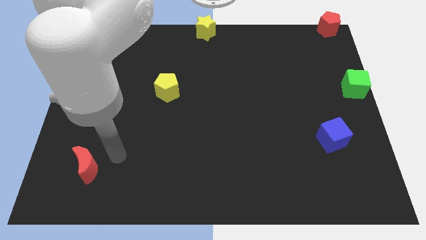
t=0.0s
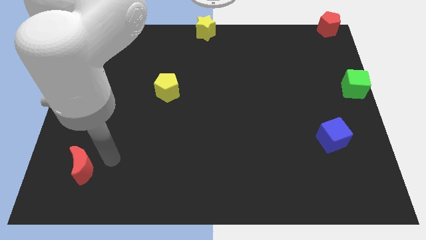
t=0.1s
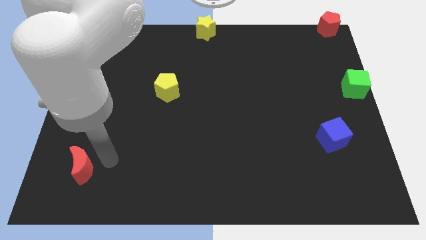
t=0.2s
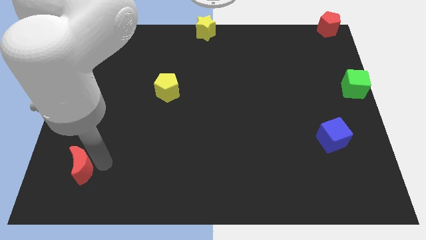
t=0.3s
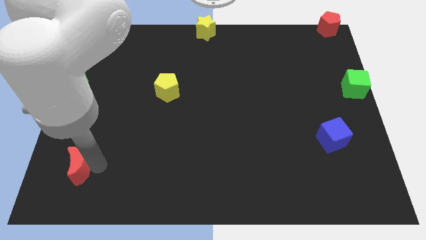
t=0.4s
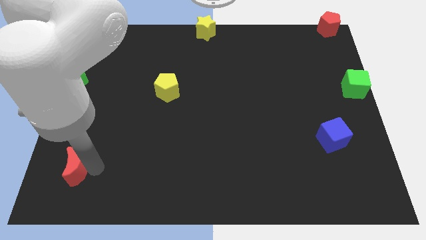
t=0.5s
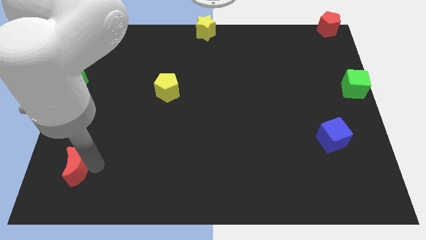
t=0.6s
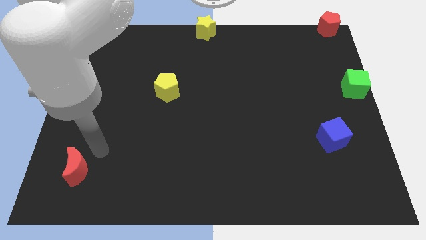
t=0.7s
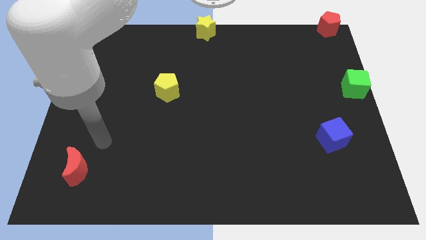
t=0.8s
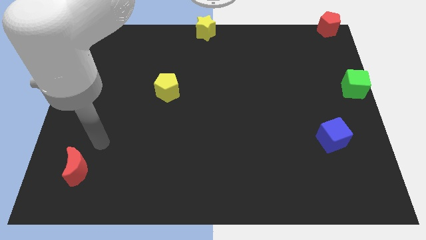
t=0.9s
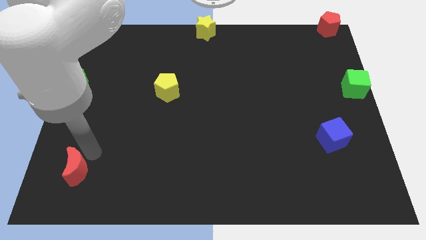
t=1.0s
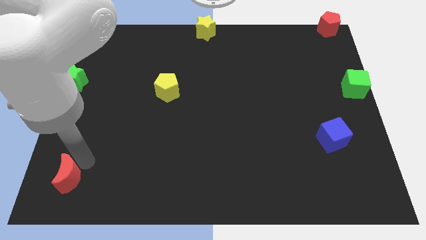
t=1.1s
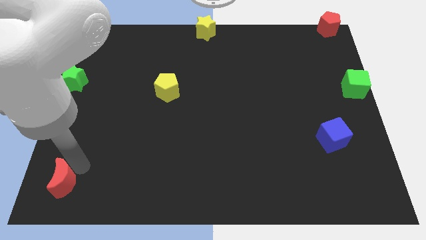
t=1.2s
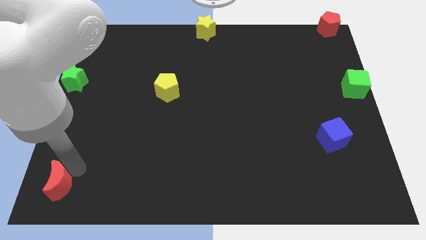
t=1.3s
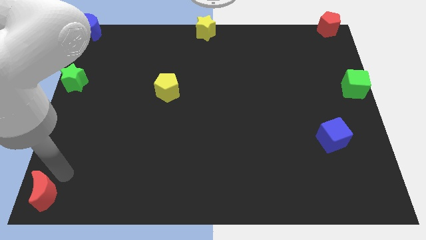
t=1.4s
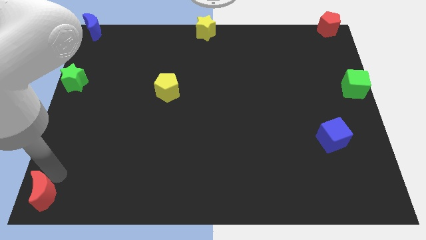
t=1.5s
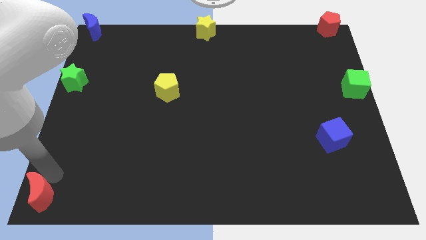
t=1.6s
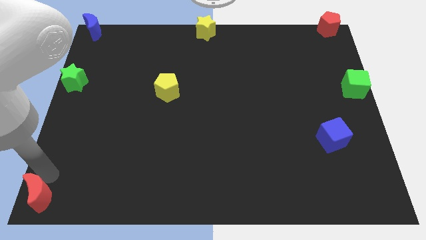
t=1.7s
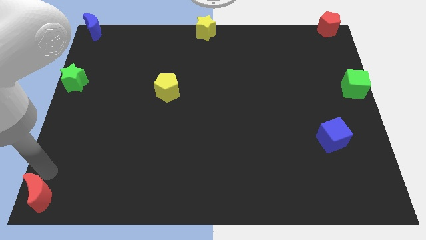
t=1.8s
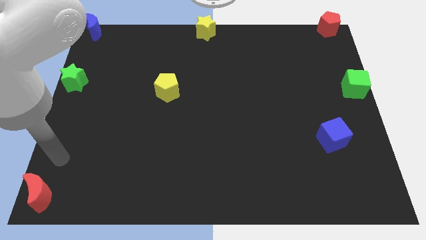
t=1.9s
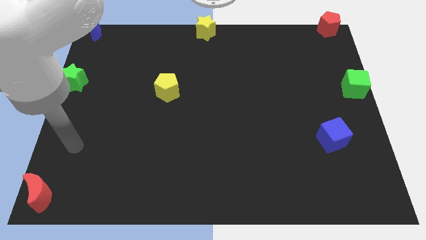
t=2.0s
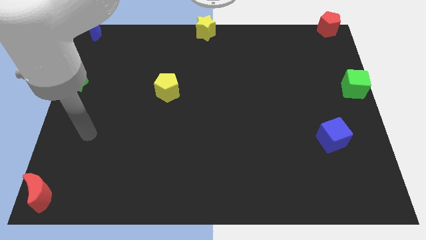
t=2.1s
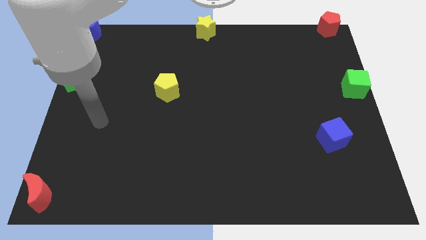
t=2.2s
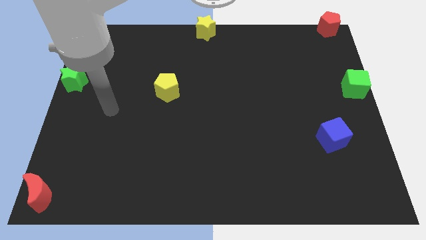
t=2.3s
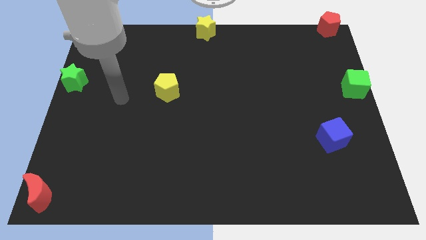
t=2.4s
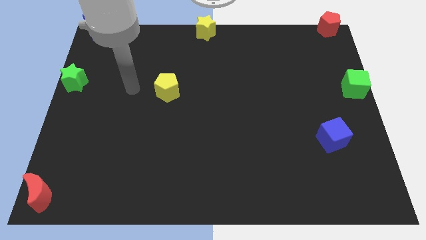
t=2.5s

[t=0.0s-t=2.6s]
place the red crescent at the bottom left of the board

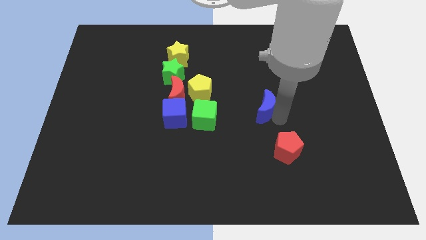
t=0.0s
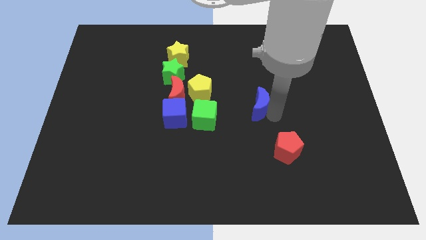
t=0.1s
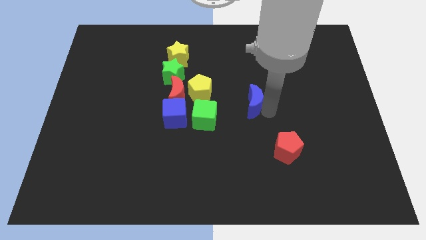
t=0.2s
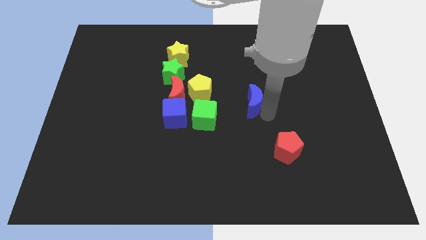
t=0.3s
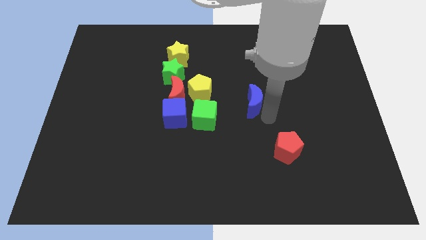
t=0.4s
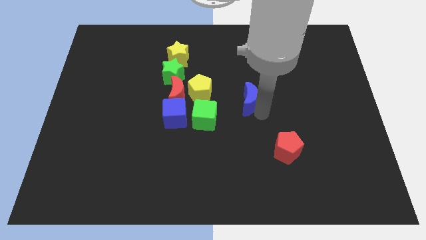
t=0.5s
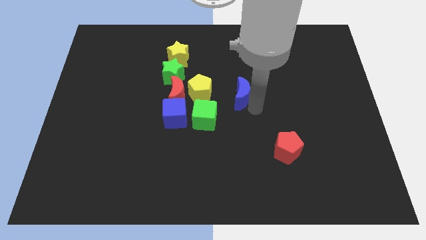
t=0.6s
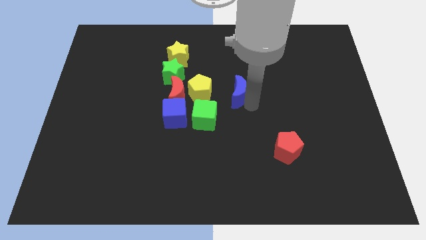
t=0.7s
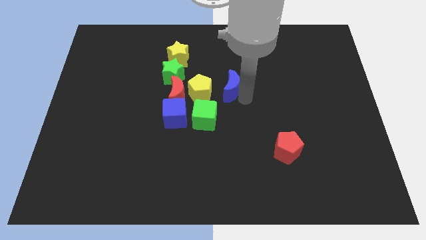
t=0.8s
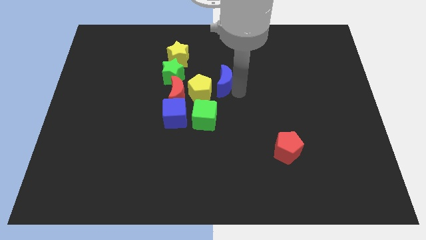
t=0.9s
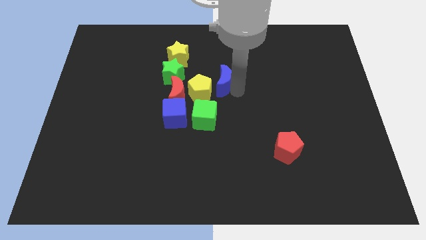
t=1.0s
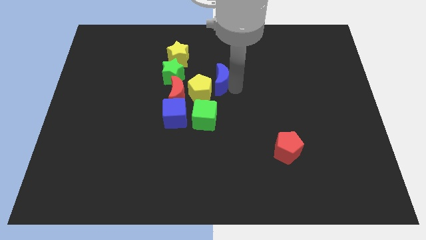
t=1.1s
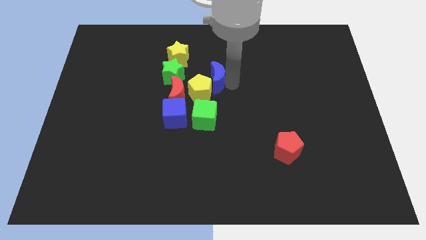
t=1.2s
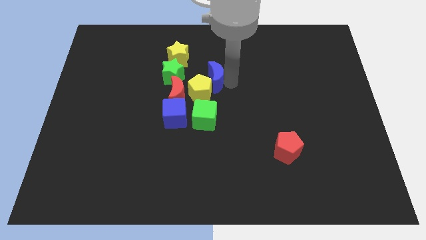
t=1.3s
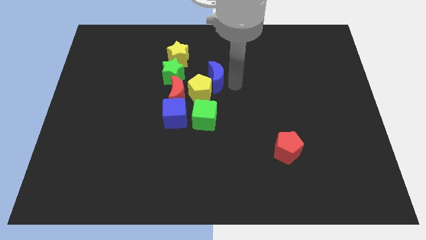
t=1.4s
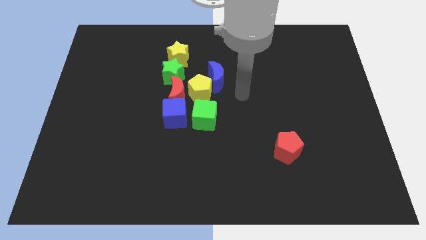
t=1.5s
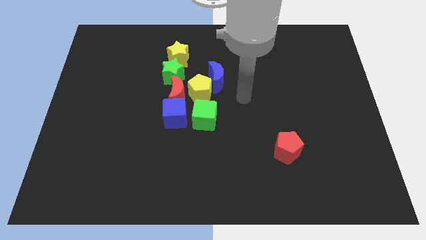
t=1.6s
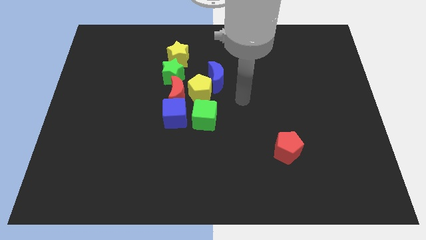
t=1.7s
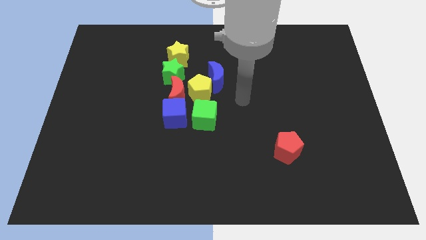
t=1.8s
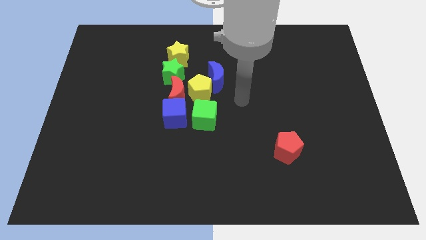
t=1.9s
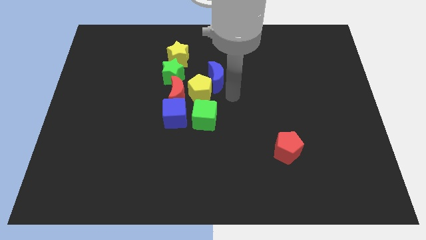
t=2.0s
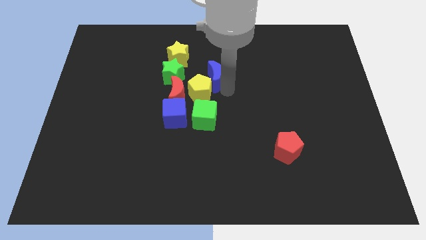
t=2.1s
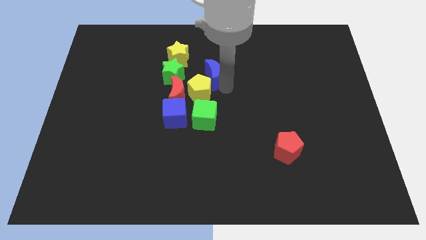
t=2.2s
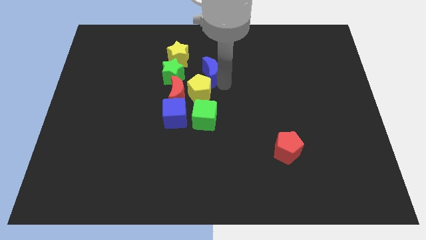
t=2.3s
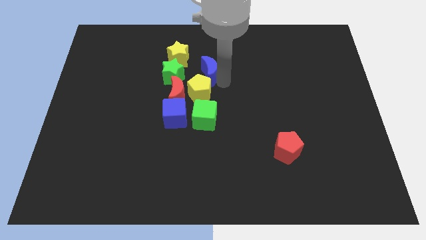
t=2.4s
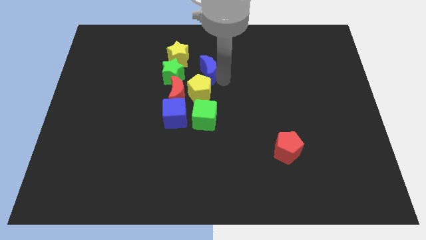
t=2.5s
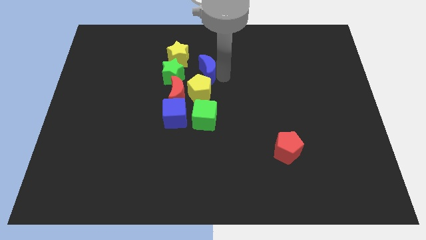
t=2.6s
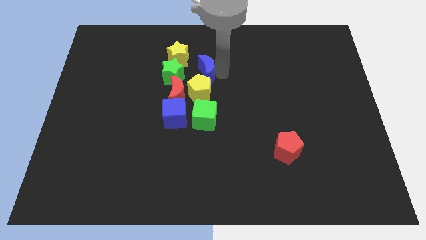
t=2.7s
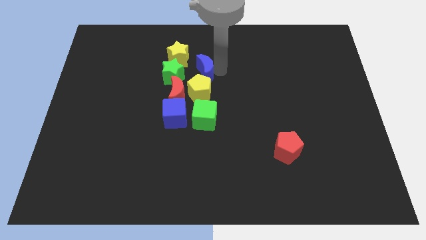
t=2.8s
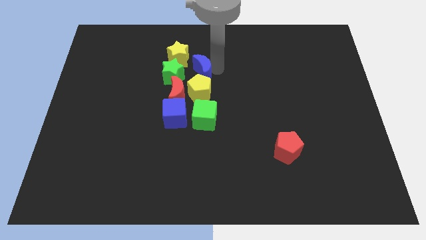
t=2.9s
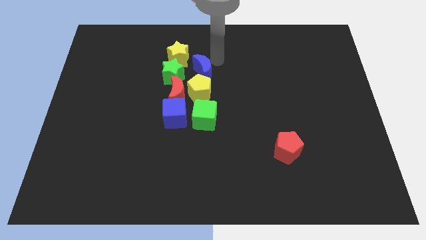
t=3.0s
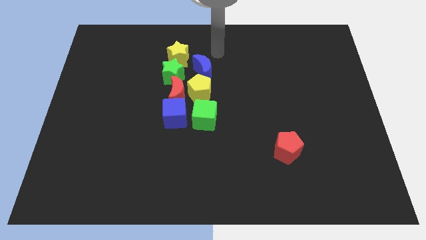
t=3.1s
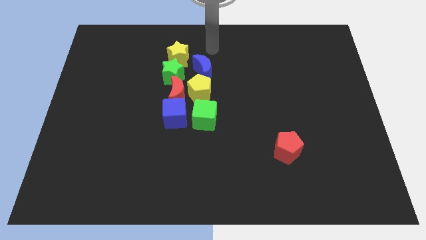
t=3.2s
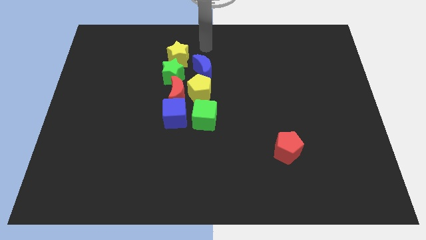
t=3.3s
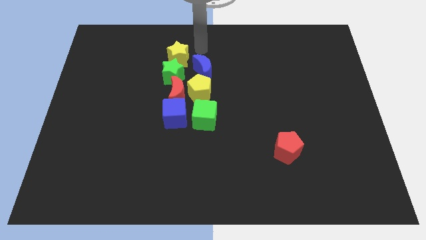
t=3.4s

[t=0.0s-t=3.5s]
place the blue crescent above the yellow pentagon

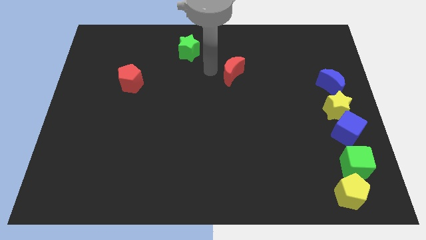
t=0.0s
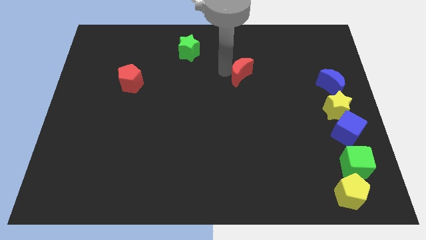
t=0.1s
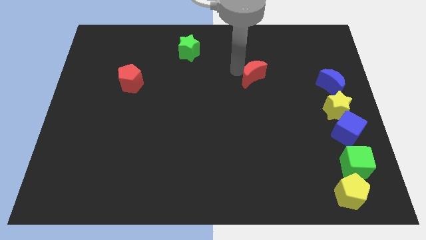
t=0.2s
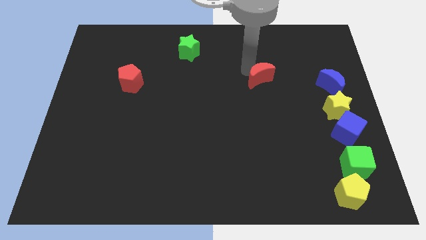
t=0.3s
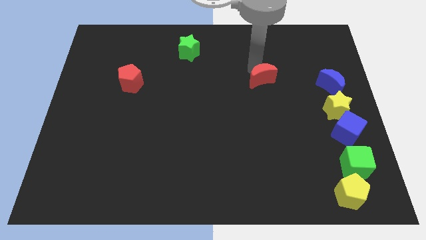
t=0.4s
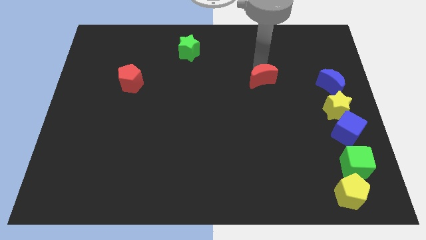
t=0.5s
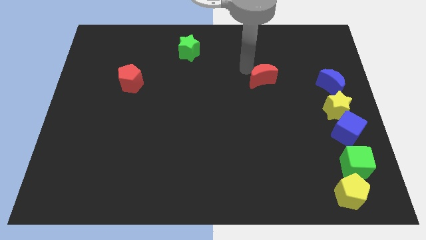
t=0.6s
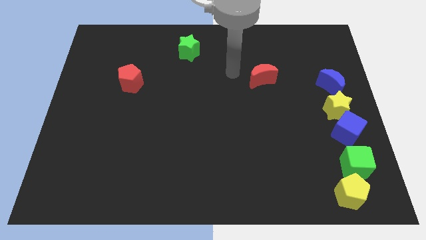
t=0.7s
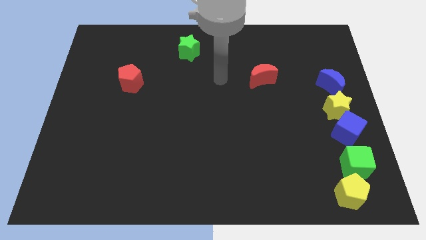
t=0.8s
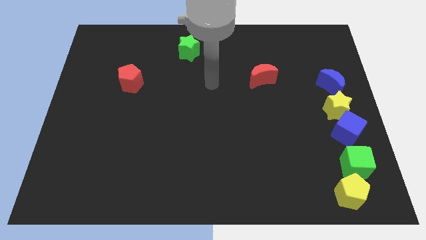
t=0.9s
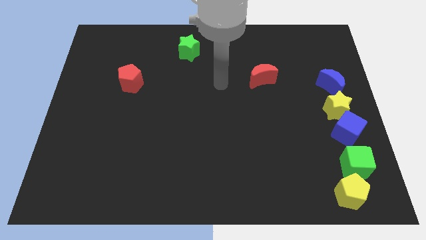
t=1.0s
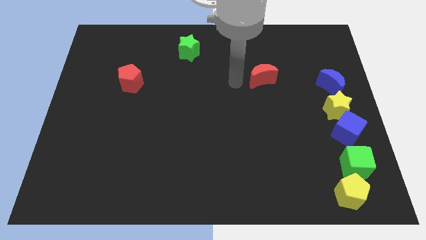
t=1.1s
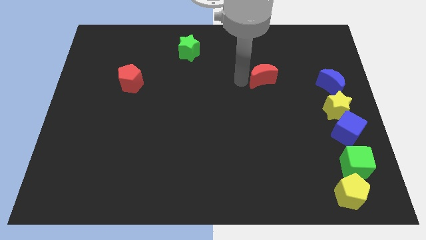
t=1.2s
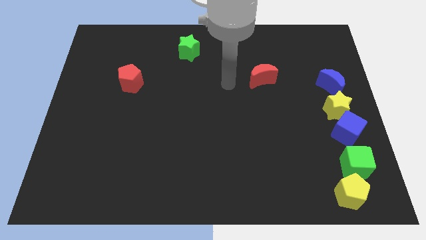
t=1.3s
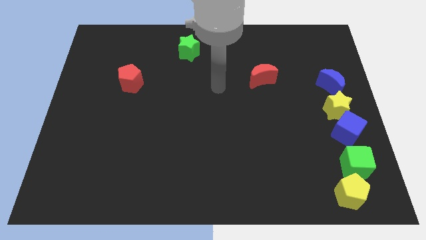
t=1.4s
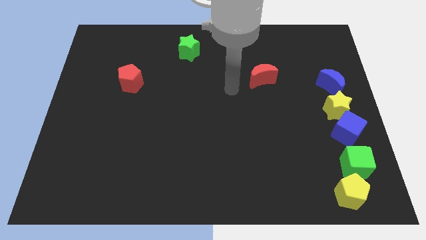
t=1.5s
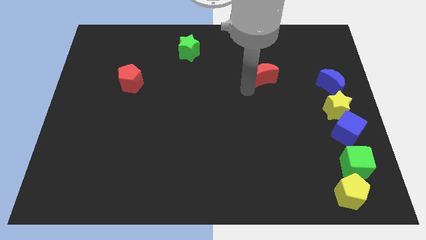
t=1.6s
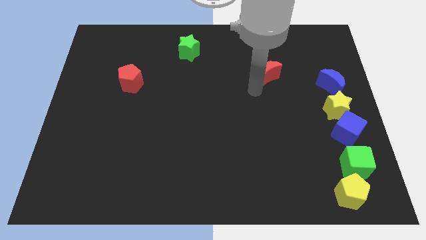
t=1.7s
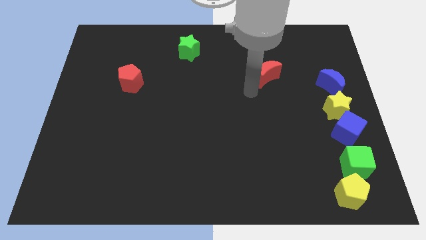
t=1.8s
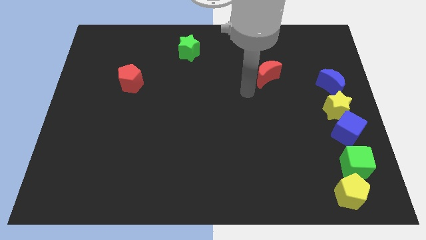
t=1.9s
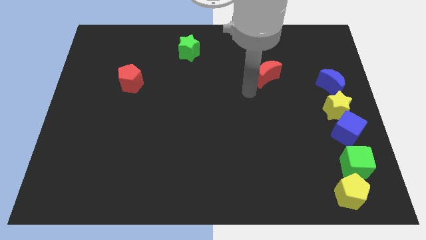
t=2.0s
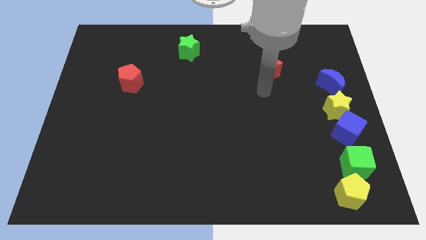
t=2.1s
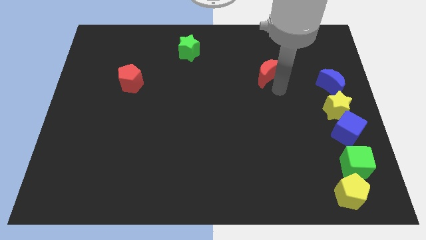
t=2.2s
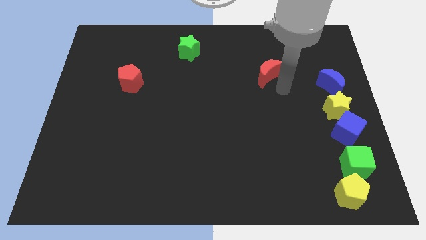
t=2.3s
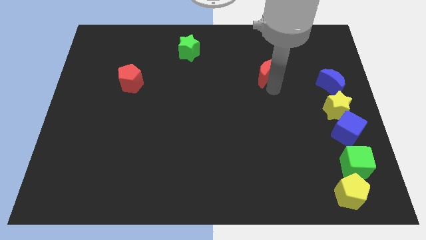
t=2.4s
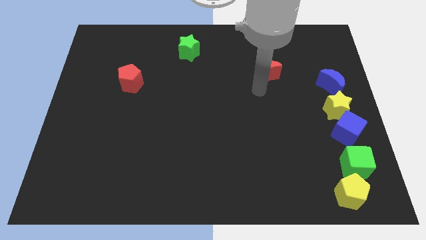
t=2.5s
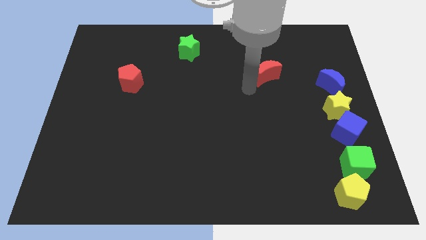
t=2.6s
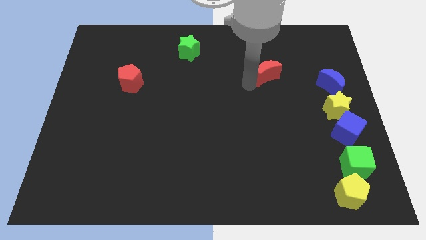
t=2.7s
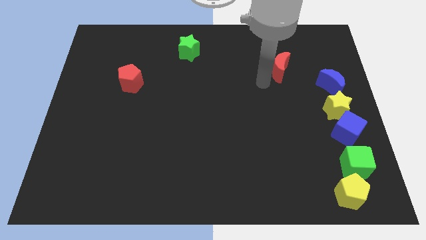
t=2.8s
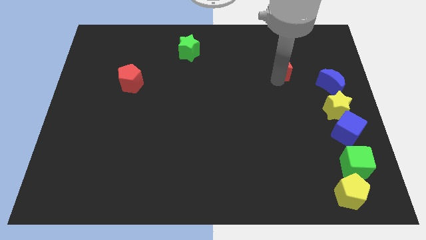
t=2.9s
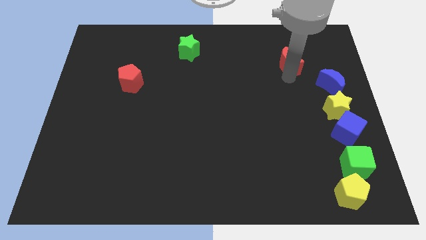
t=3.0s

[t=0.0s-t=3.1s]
put the red moon diagonally to blue moon
